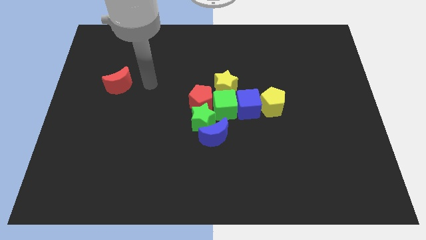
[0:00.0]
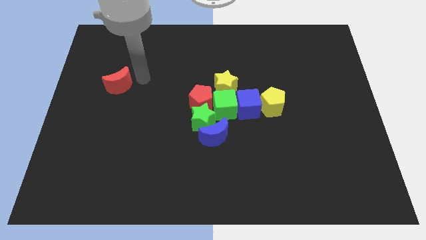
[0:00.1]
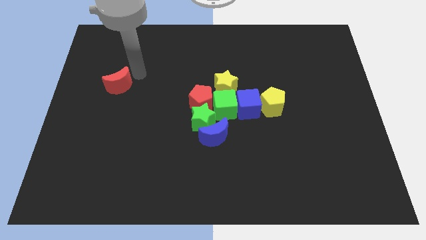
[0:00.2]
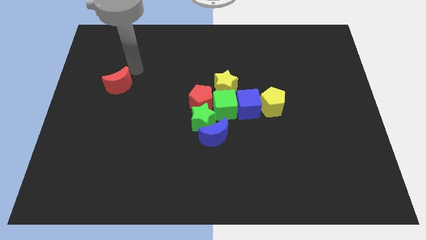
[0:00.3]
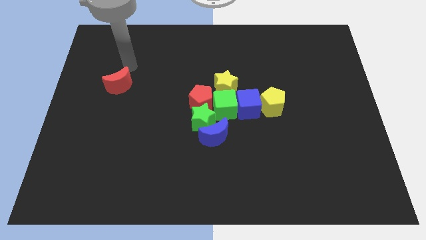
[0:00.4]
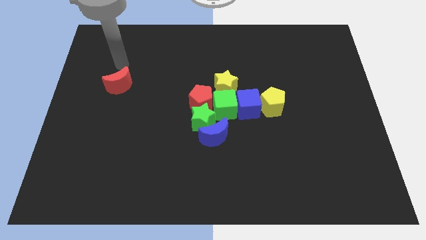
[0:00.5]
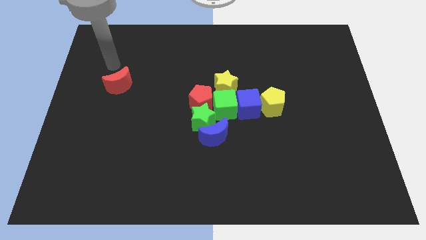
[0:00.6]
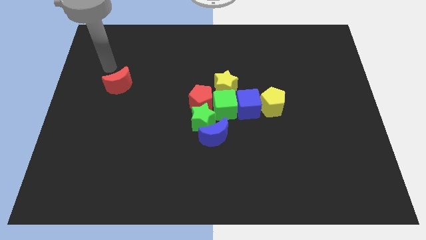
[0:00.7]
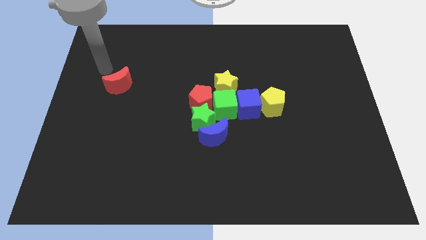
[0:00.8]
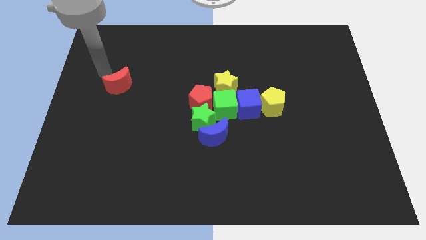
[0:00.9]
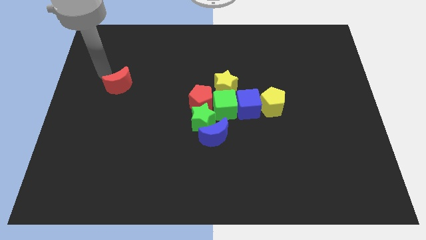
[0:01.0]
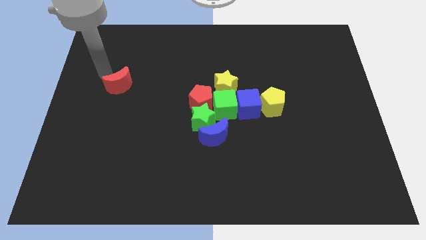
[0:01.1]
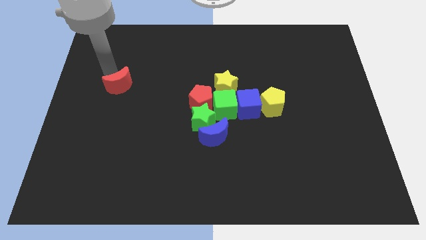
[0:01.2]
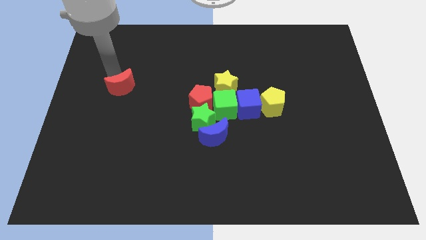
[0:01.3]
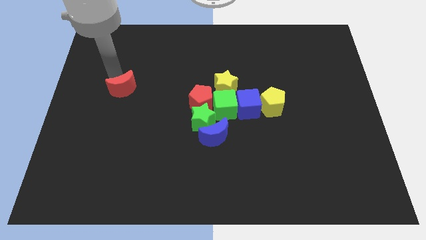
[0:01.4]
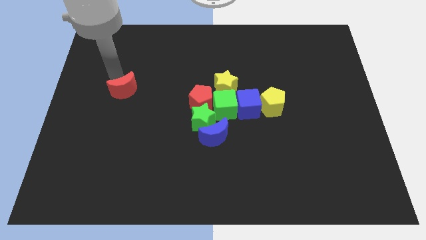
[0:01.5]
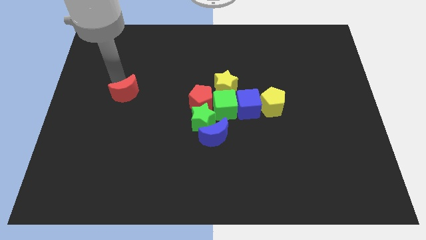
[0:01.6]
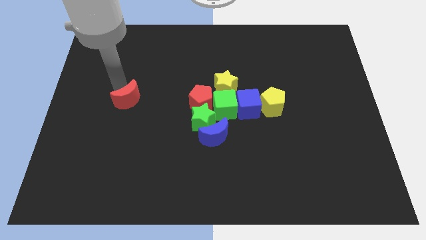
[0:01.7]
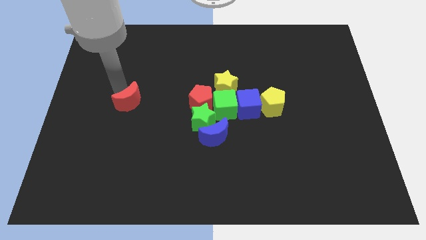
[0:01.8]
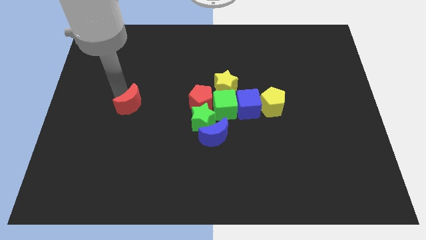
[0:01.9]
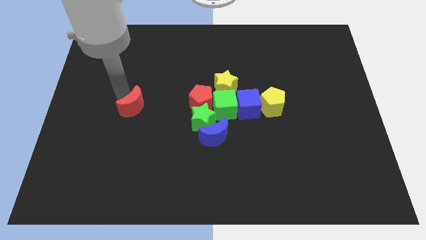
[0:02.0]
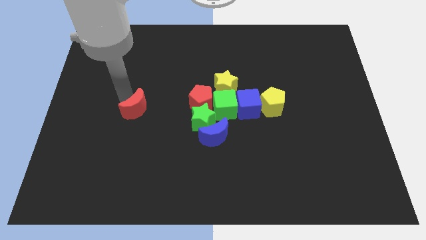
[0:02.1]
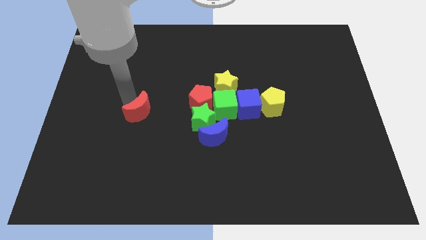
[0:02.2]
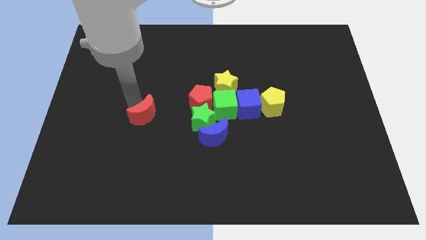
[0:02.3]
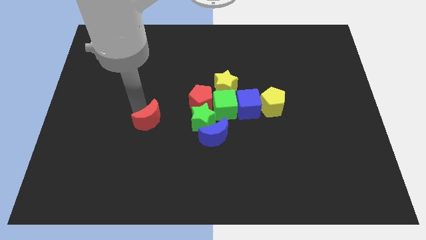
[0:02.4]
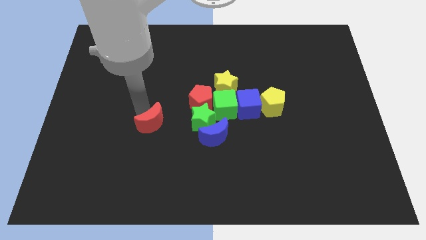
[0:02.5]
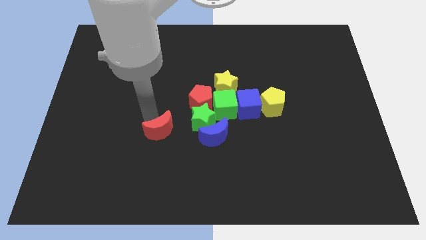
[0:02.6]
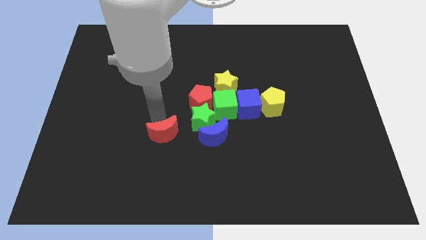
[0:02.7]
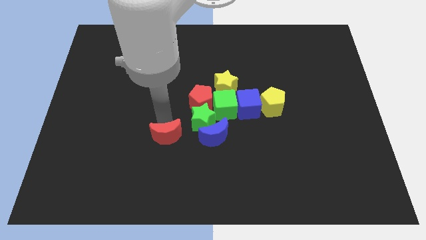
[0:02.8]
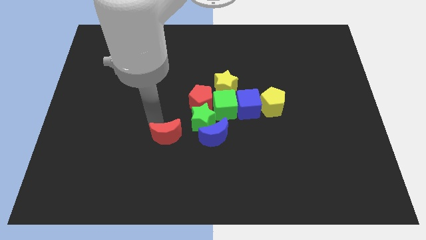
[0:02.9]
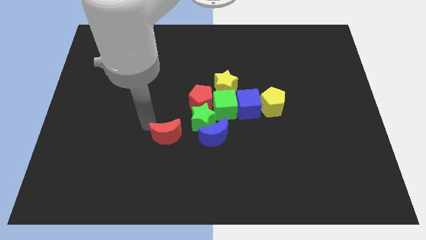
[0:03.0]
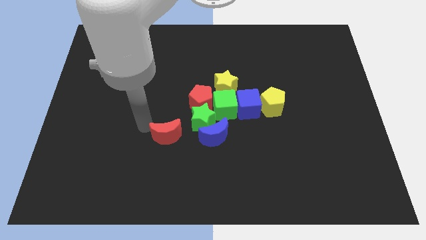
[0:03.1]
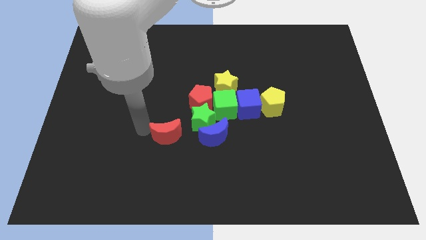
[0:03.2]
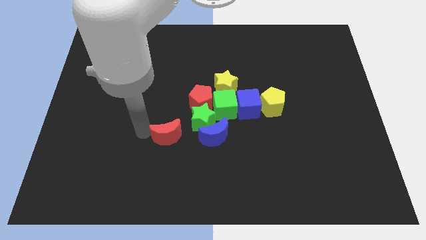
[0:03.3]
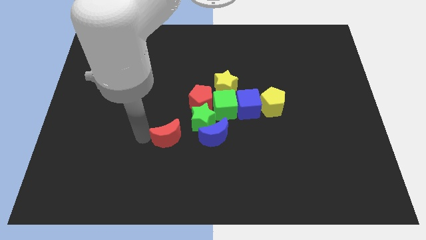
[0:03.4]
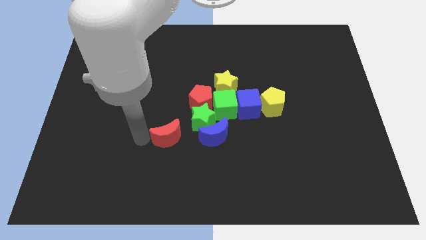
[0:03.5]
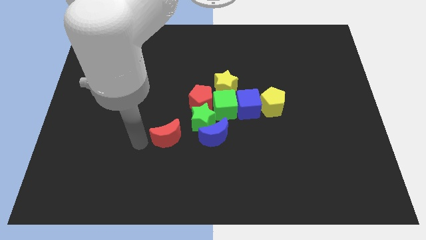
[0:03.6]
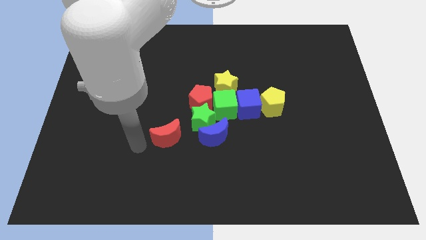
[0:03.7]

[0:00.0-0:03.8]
push the red crescent to the left of the blue crescent

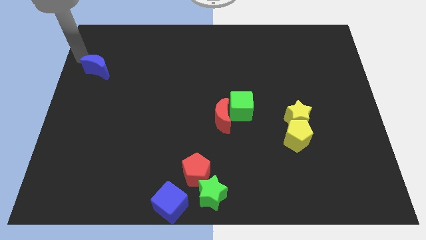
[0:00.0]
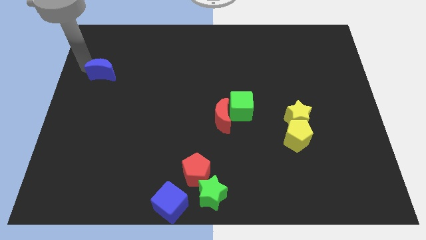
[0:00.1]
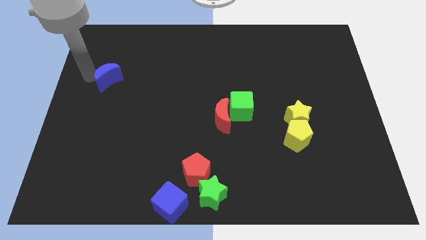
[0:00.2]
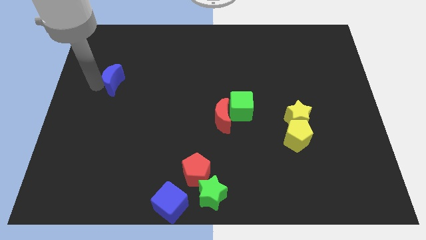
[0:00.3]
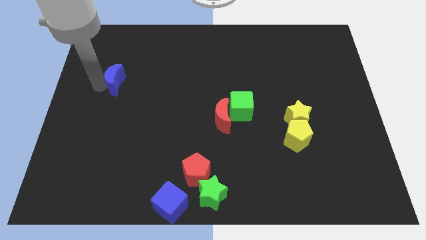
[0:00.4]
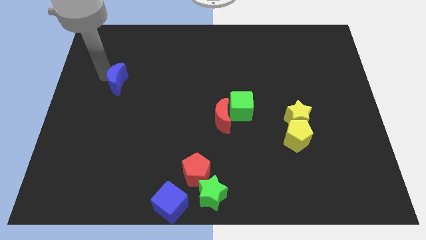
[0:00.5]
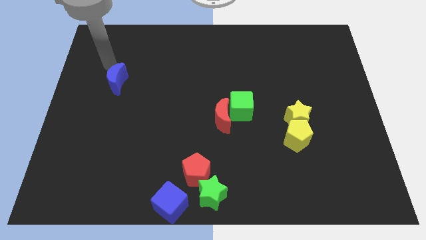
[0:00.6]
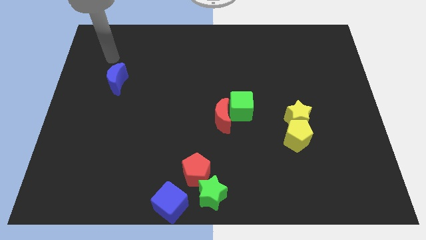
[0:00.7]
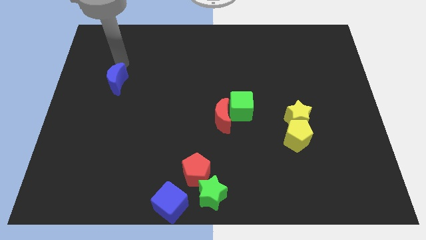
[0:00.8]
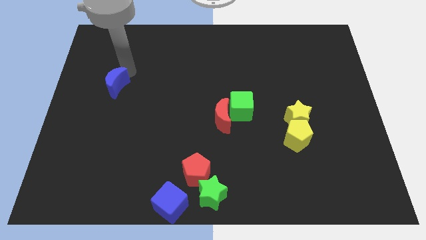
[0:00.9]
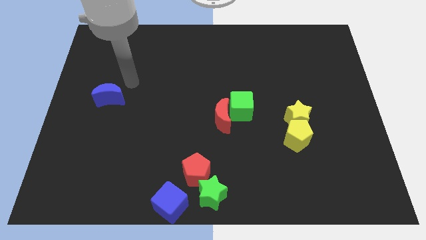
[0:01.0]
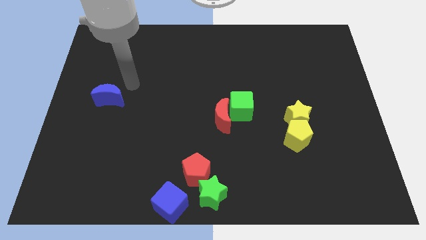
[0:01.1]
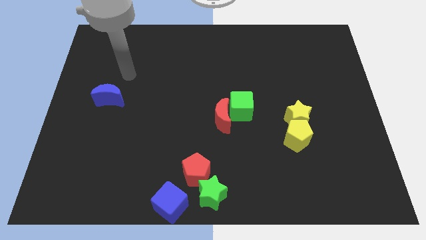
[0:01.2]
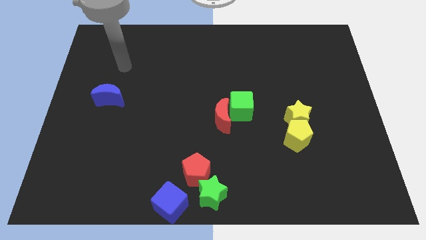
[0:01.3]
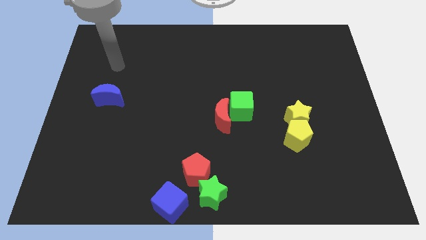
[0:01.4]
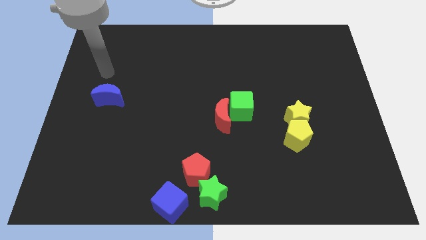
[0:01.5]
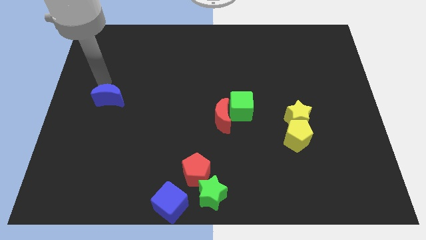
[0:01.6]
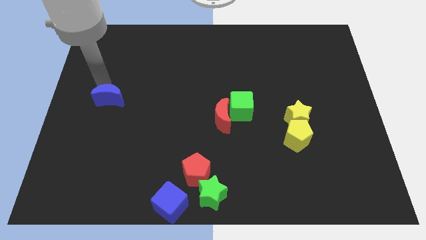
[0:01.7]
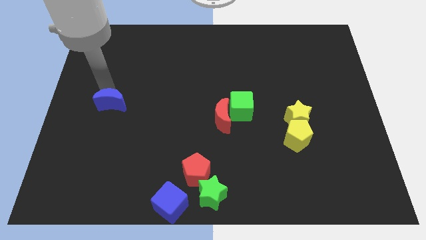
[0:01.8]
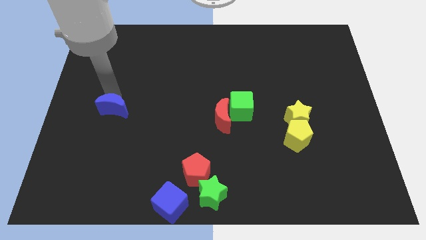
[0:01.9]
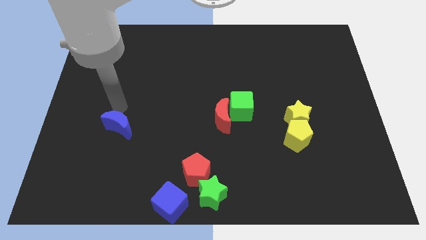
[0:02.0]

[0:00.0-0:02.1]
move the blue cube horizon to the green cube

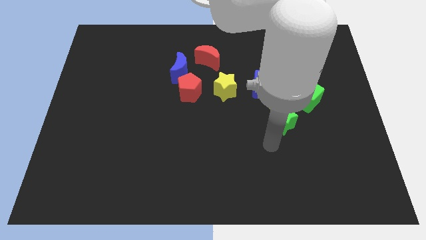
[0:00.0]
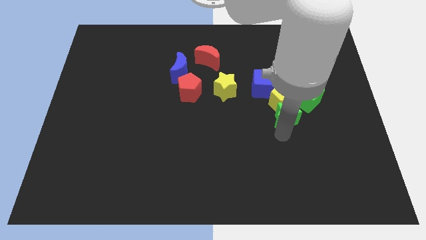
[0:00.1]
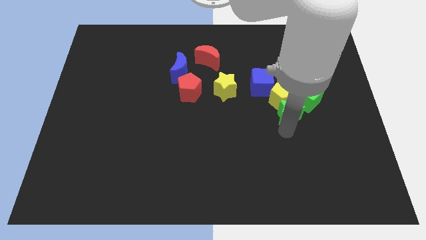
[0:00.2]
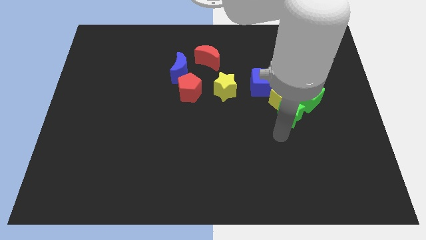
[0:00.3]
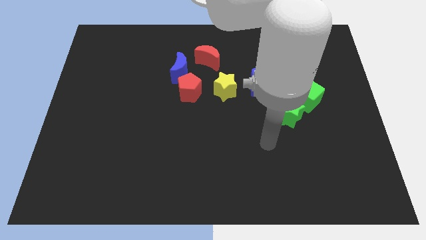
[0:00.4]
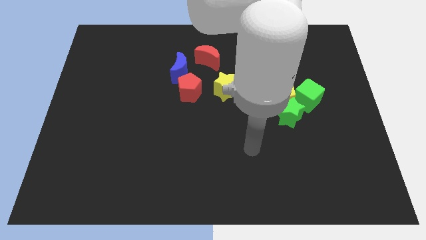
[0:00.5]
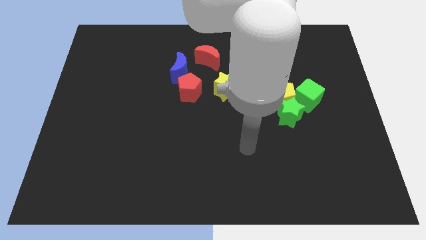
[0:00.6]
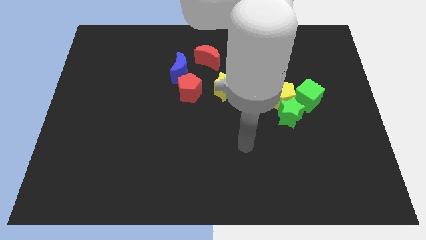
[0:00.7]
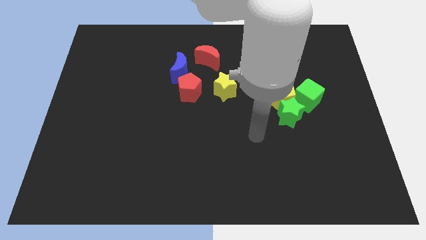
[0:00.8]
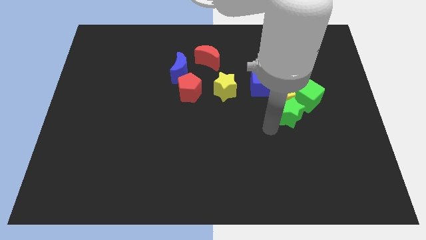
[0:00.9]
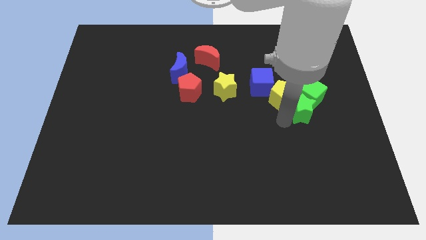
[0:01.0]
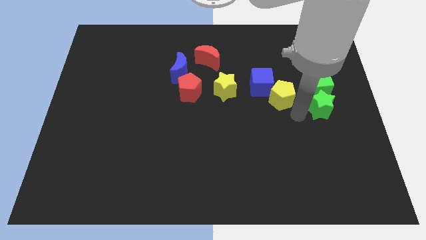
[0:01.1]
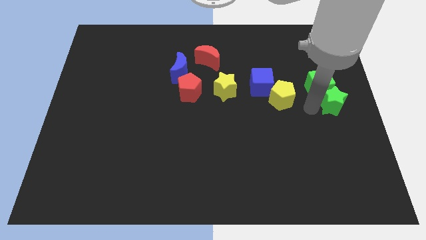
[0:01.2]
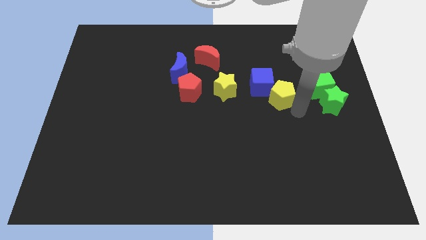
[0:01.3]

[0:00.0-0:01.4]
push the green star into the green cube

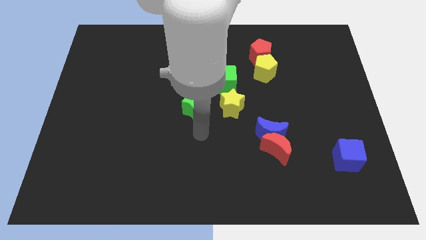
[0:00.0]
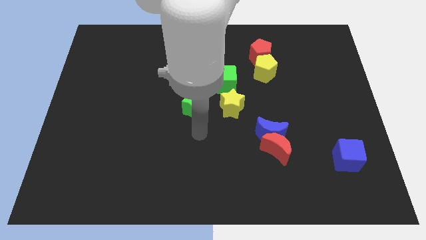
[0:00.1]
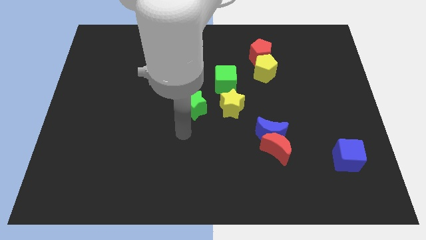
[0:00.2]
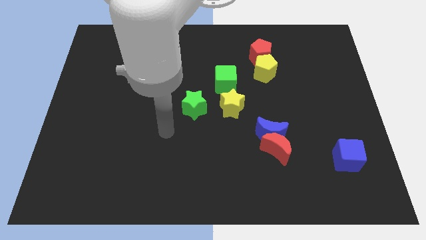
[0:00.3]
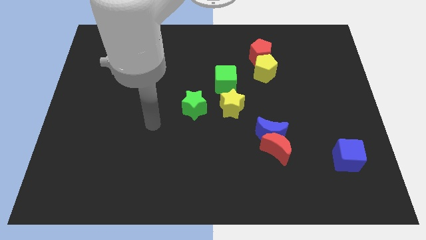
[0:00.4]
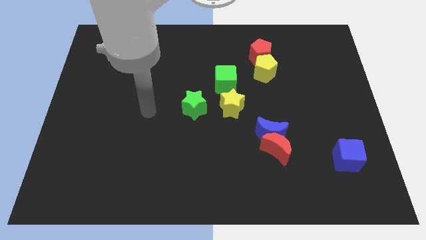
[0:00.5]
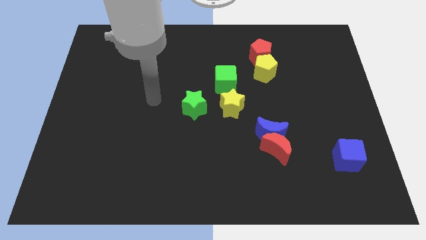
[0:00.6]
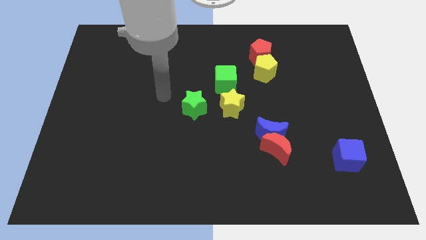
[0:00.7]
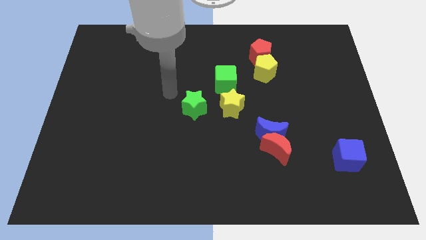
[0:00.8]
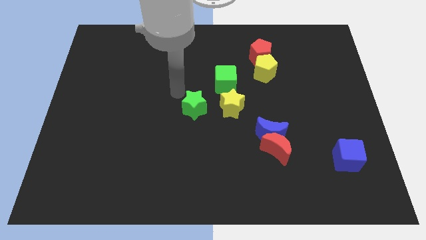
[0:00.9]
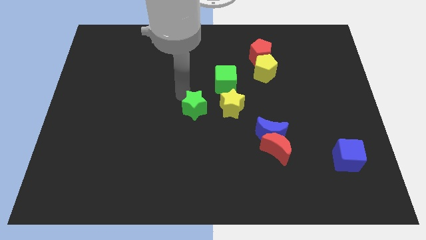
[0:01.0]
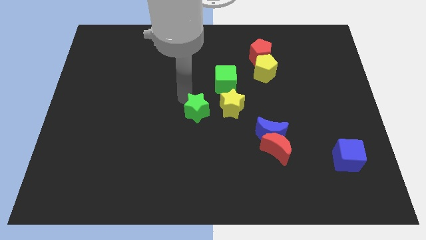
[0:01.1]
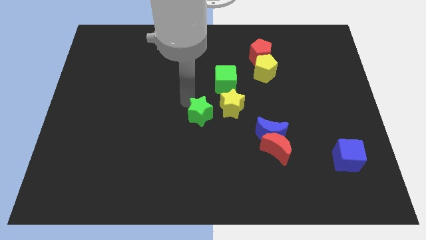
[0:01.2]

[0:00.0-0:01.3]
tap the top left side of the green star

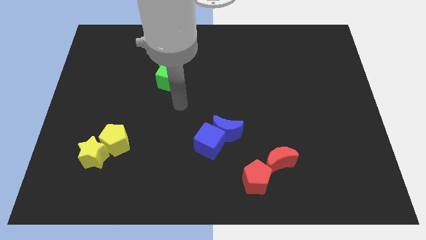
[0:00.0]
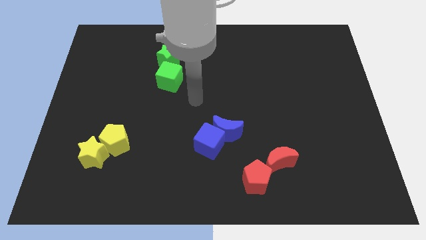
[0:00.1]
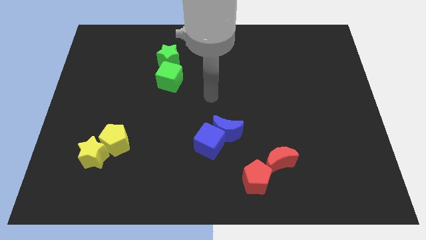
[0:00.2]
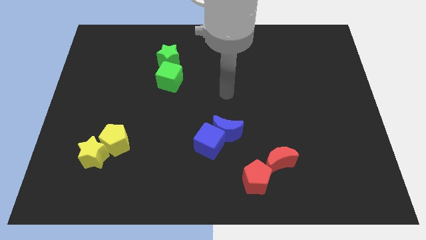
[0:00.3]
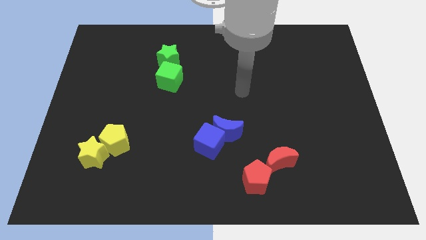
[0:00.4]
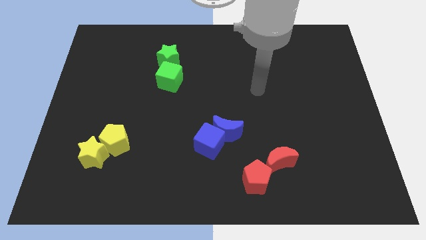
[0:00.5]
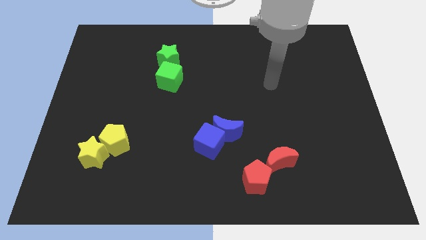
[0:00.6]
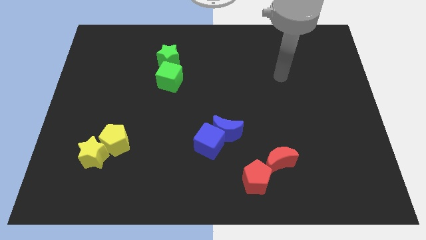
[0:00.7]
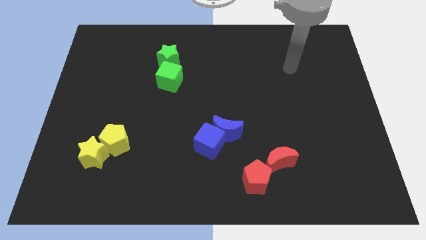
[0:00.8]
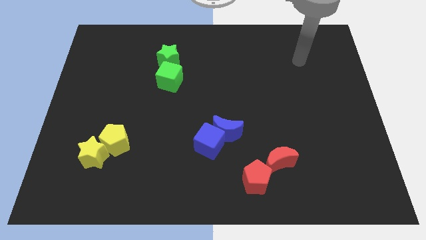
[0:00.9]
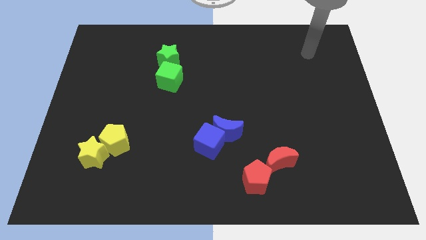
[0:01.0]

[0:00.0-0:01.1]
move arm away green cube
